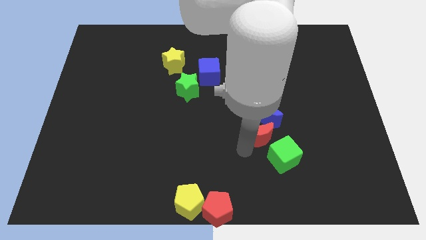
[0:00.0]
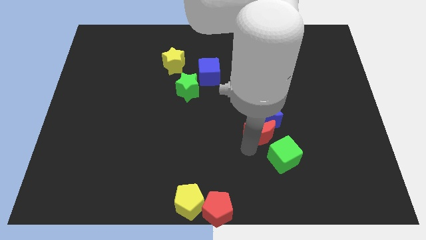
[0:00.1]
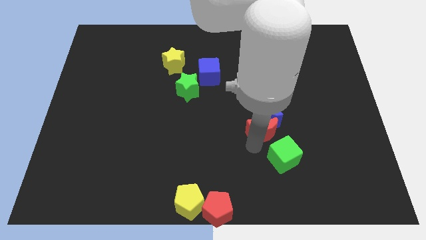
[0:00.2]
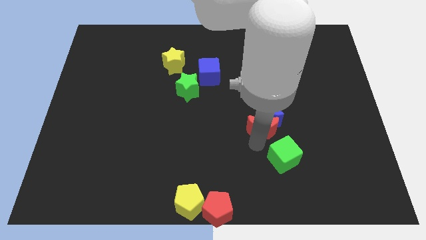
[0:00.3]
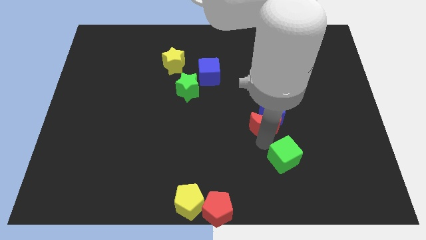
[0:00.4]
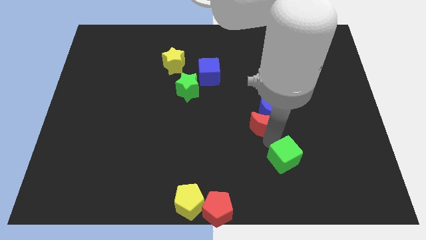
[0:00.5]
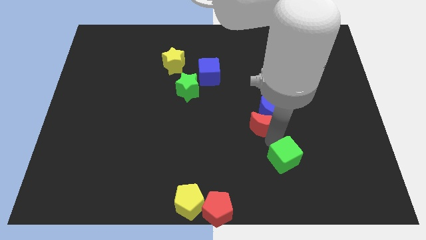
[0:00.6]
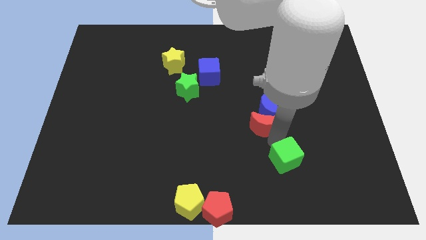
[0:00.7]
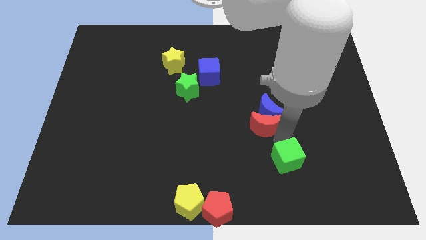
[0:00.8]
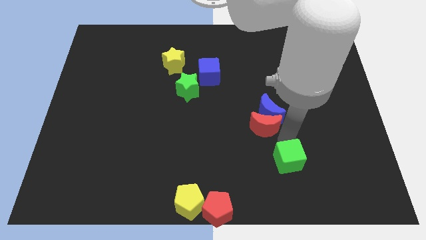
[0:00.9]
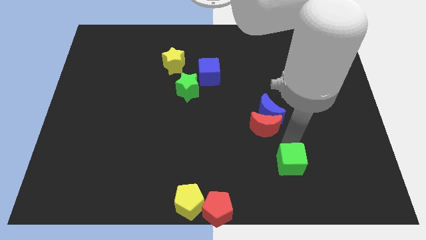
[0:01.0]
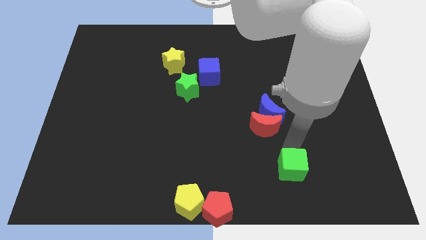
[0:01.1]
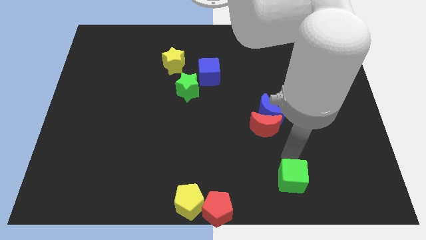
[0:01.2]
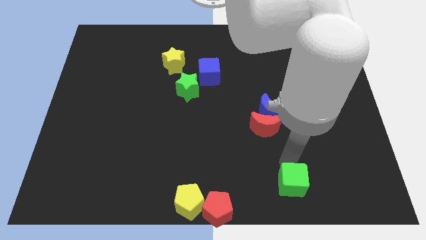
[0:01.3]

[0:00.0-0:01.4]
slide the green cube towards the bottom of the board

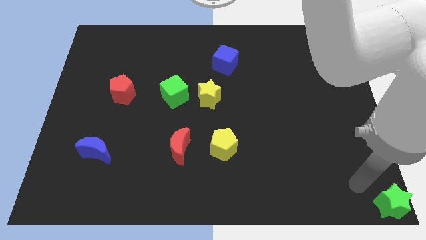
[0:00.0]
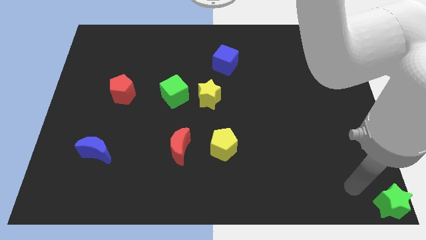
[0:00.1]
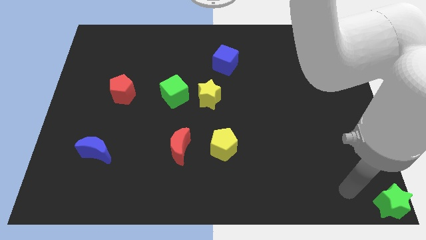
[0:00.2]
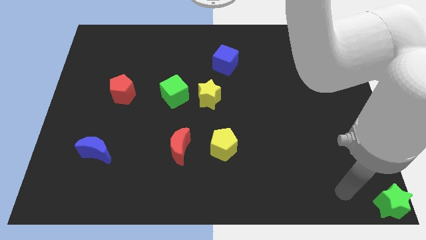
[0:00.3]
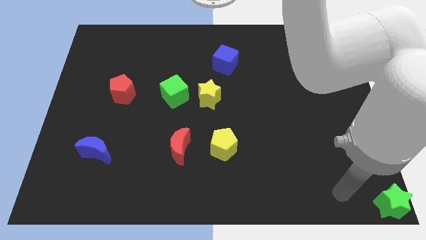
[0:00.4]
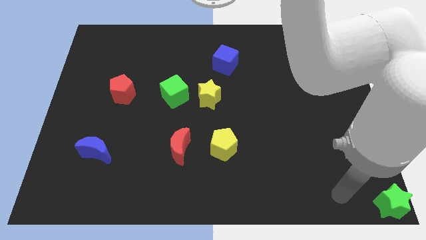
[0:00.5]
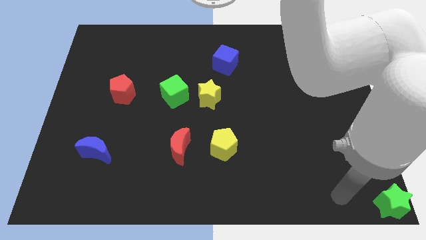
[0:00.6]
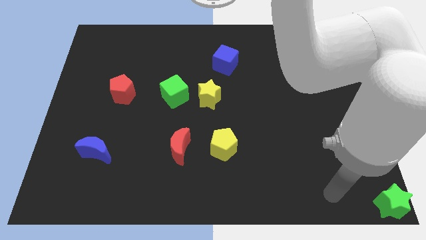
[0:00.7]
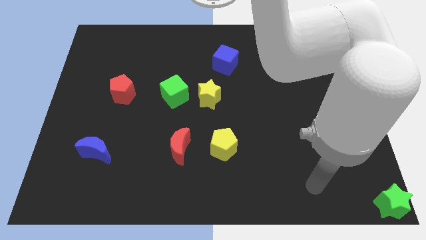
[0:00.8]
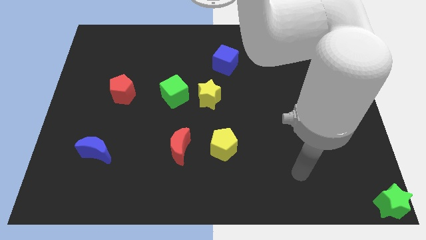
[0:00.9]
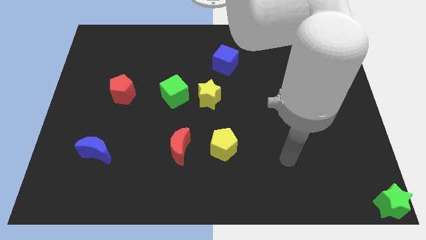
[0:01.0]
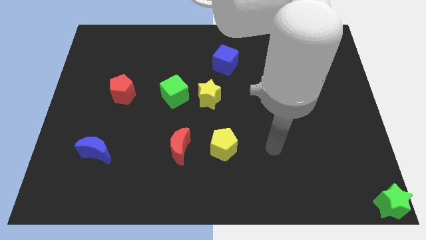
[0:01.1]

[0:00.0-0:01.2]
move your arm away from green star

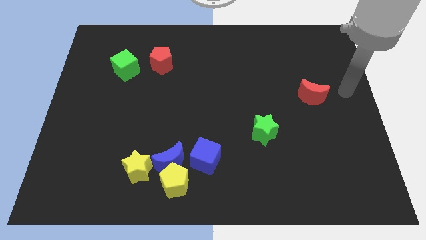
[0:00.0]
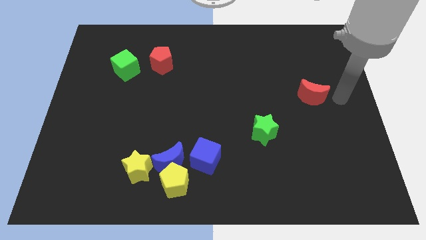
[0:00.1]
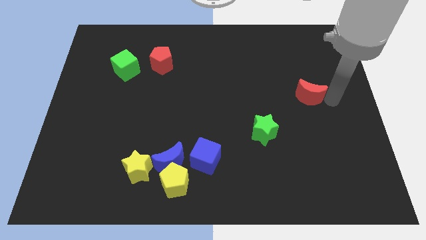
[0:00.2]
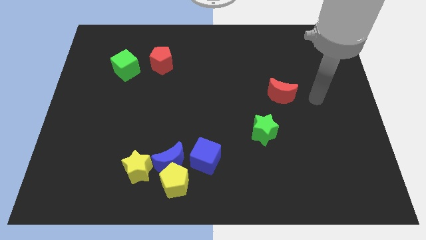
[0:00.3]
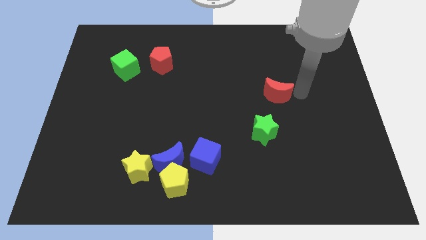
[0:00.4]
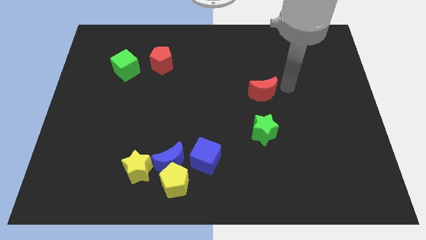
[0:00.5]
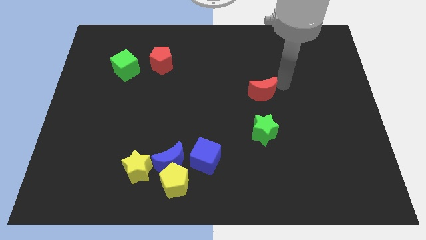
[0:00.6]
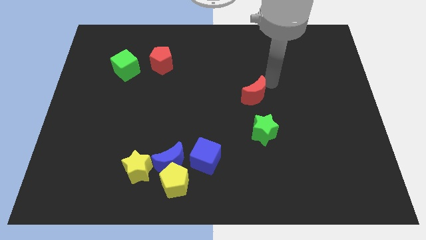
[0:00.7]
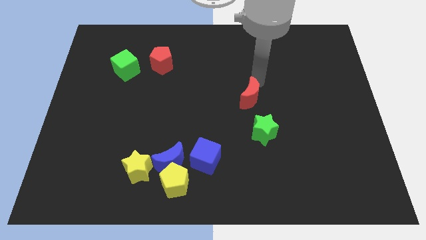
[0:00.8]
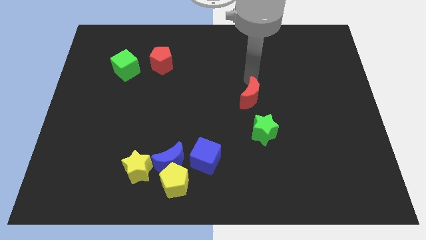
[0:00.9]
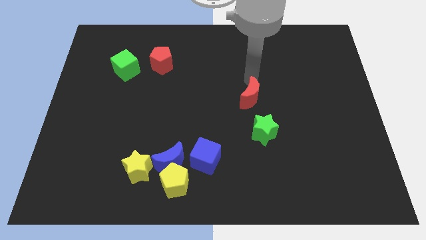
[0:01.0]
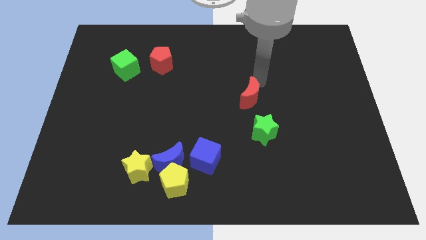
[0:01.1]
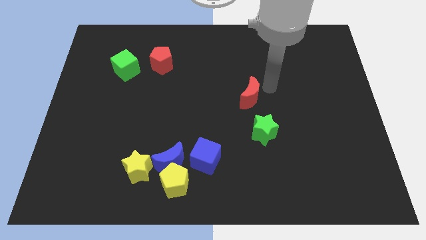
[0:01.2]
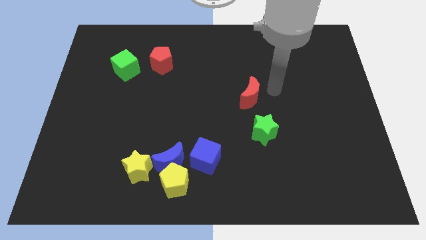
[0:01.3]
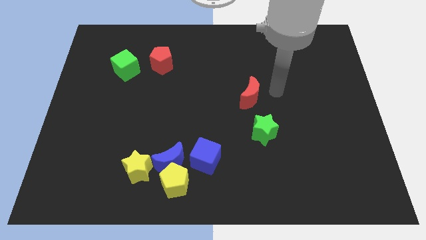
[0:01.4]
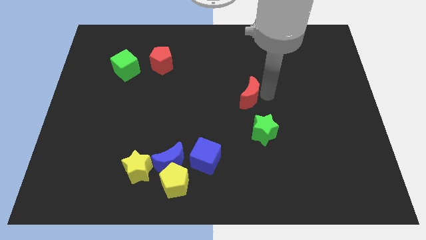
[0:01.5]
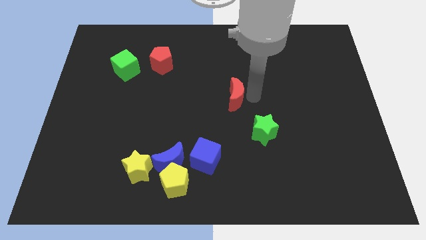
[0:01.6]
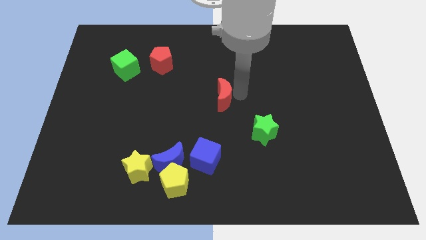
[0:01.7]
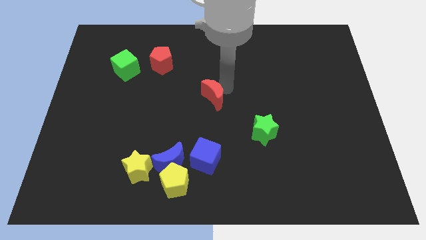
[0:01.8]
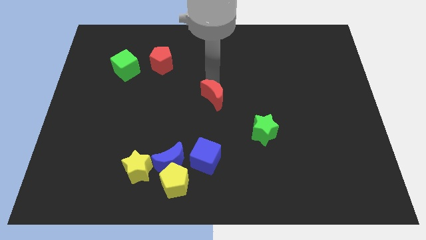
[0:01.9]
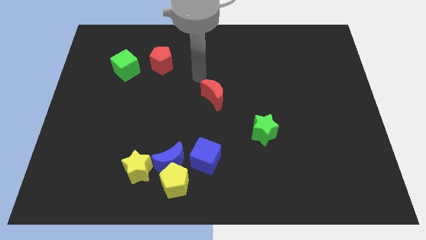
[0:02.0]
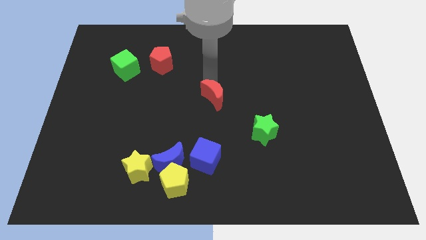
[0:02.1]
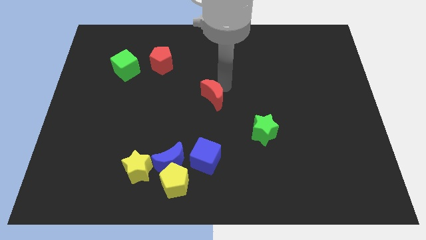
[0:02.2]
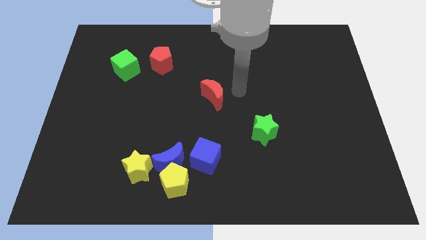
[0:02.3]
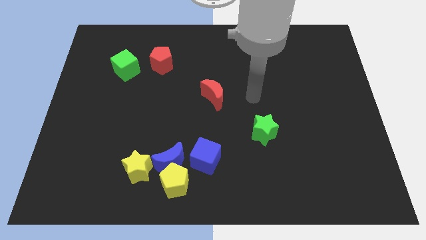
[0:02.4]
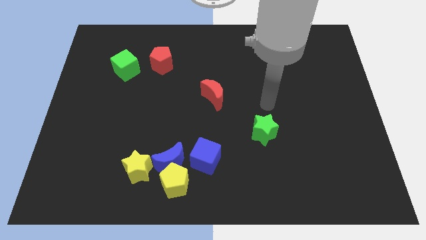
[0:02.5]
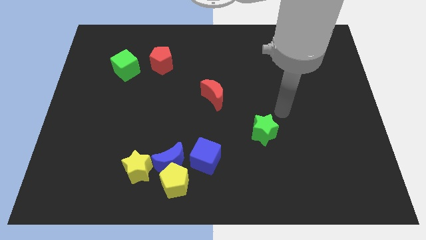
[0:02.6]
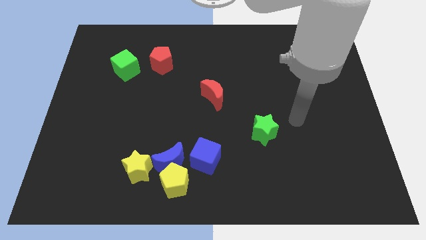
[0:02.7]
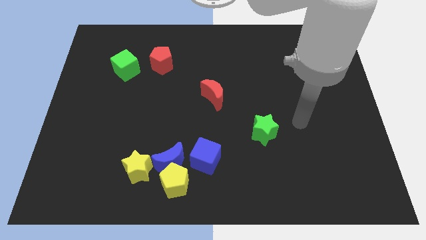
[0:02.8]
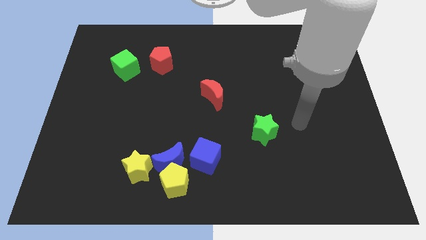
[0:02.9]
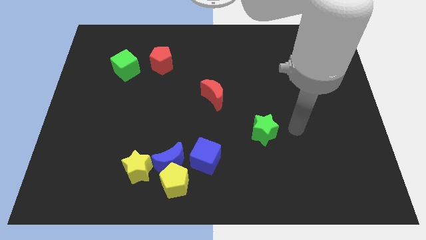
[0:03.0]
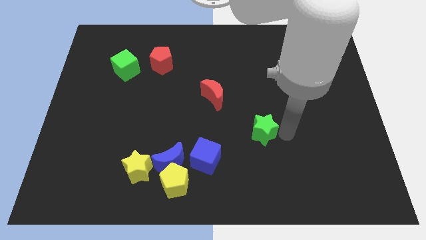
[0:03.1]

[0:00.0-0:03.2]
push the red moon to the center

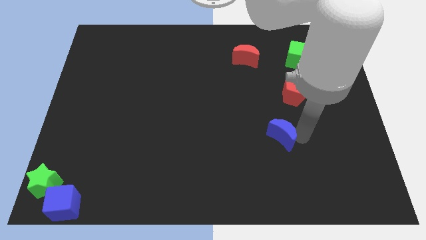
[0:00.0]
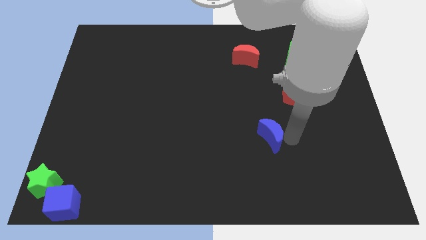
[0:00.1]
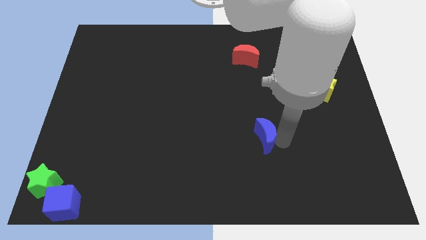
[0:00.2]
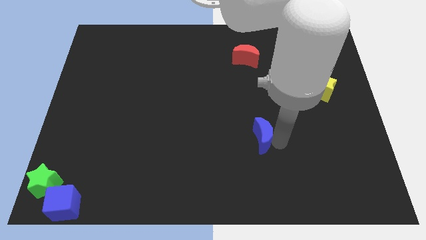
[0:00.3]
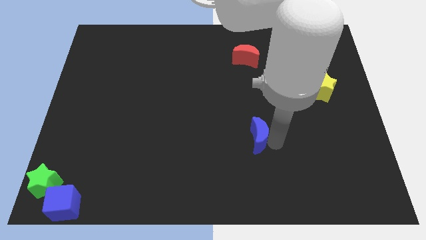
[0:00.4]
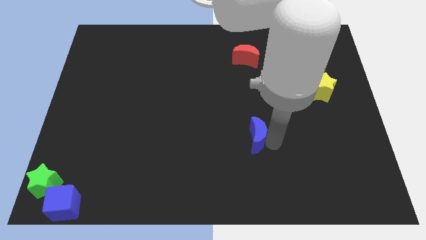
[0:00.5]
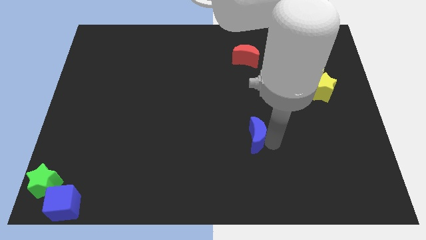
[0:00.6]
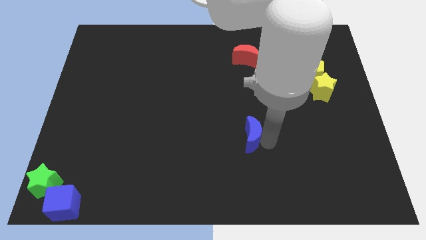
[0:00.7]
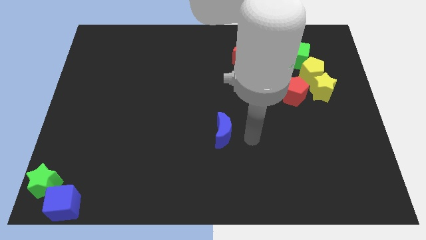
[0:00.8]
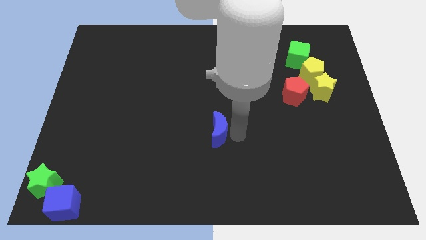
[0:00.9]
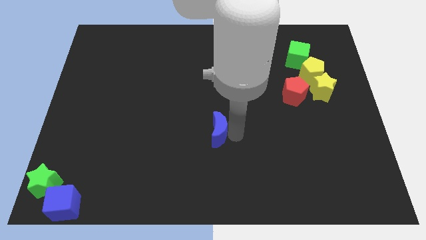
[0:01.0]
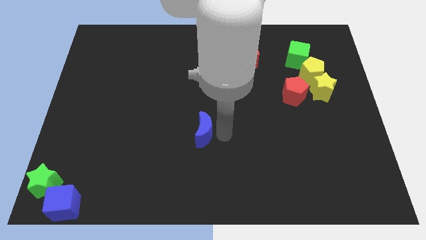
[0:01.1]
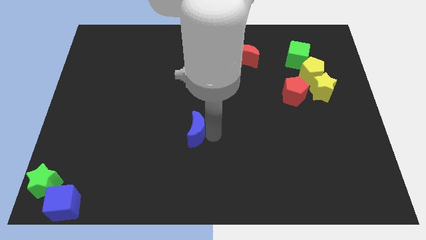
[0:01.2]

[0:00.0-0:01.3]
place the blue crescent at the center of the board

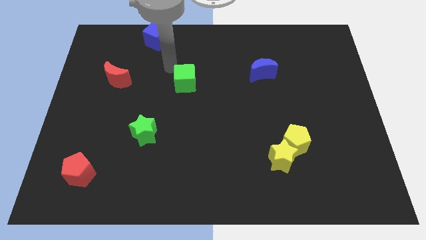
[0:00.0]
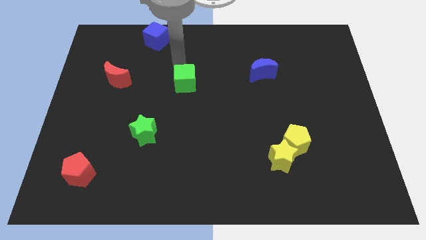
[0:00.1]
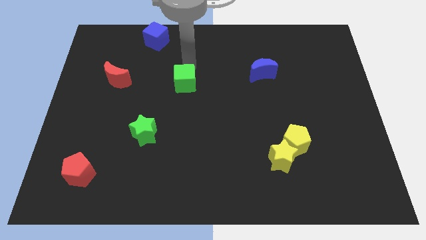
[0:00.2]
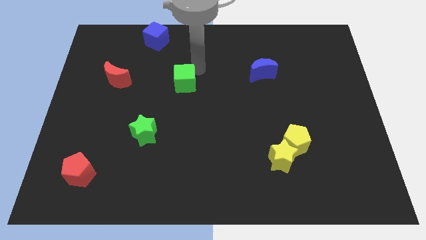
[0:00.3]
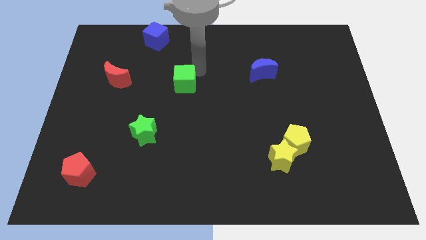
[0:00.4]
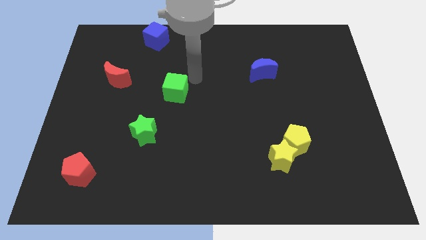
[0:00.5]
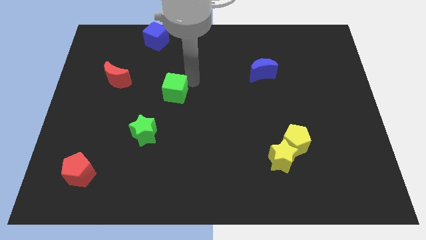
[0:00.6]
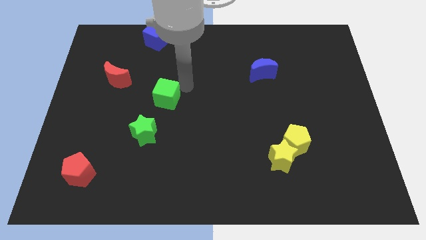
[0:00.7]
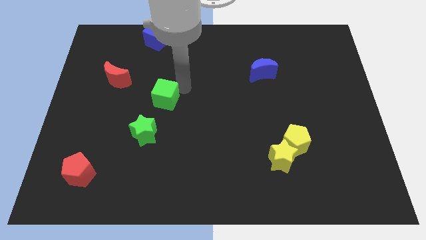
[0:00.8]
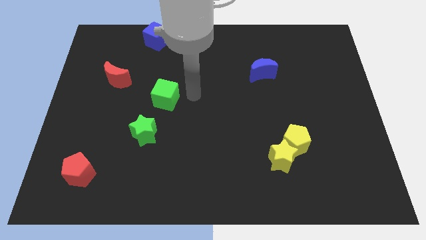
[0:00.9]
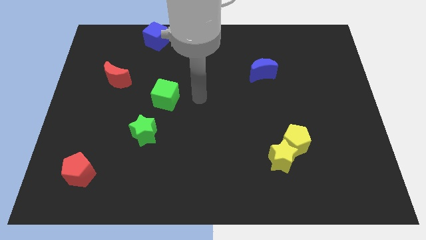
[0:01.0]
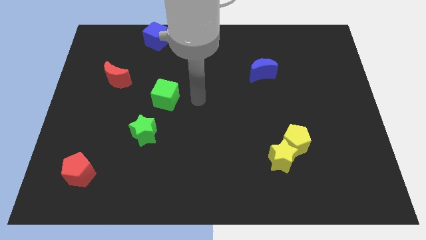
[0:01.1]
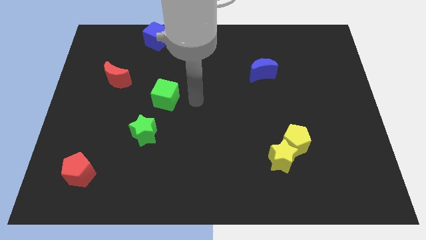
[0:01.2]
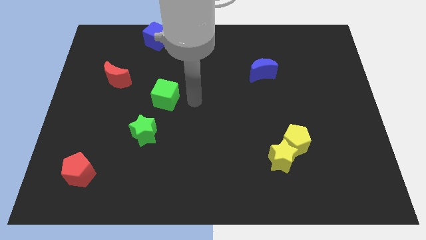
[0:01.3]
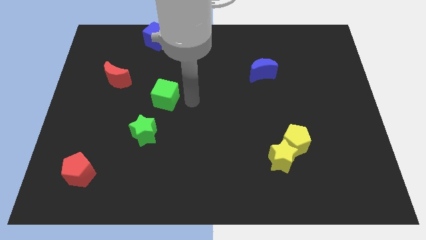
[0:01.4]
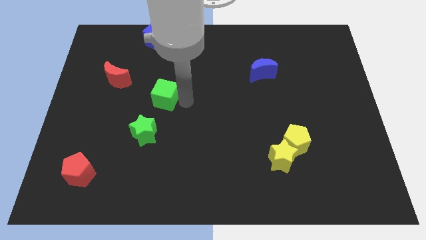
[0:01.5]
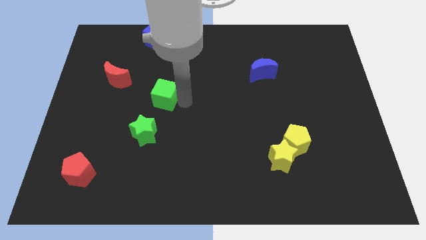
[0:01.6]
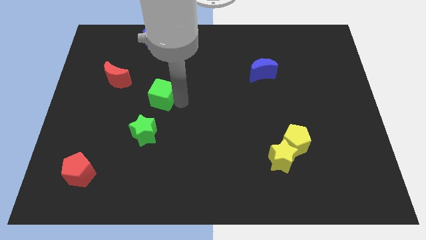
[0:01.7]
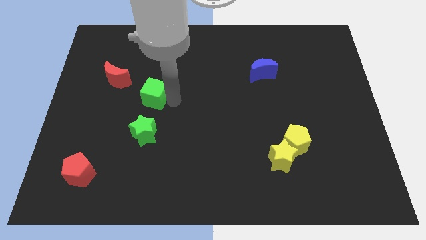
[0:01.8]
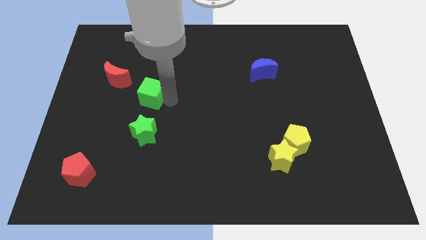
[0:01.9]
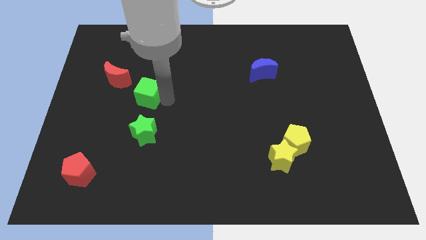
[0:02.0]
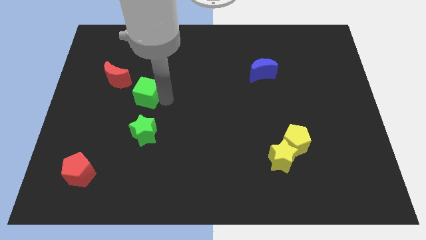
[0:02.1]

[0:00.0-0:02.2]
place green cube to the top of green star
